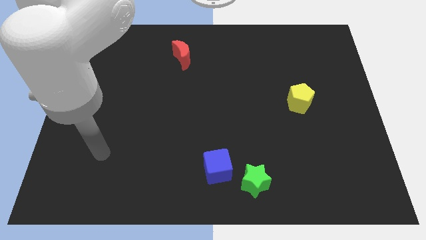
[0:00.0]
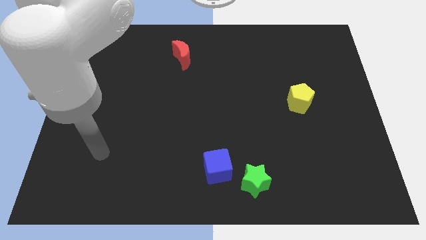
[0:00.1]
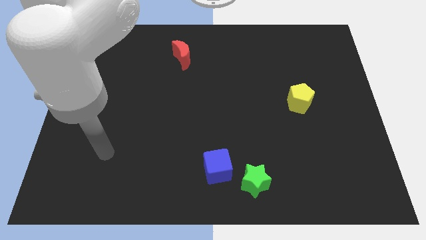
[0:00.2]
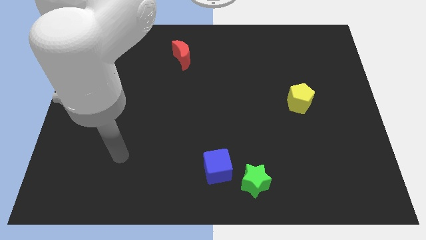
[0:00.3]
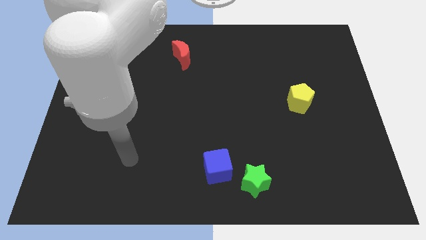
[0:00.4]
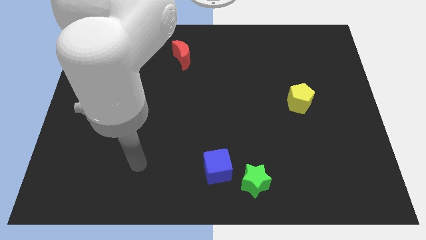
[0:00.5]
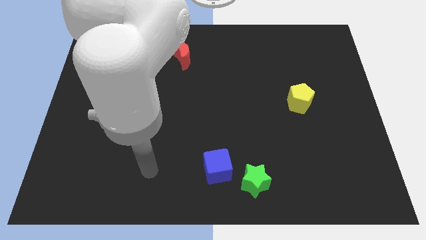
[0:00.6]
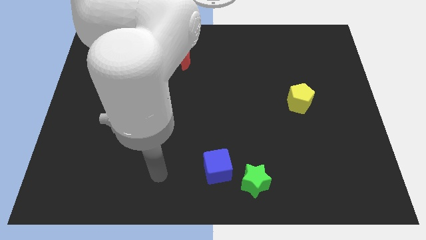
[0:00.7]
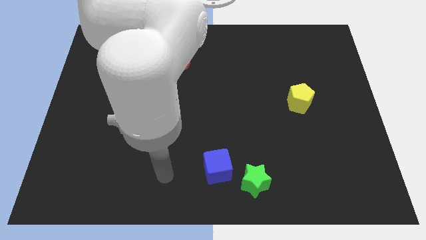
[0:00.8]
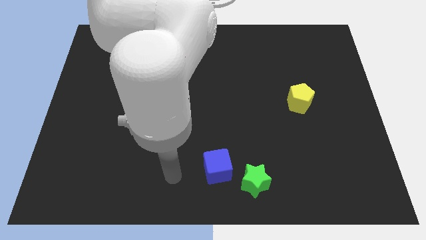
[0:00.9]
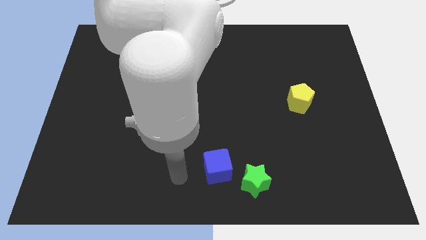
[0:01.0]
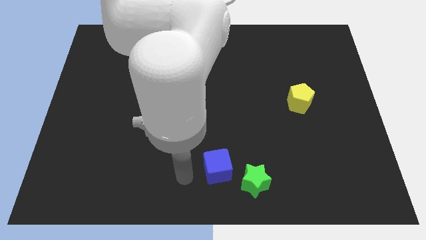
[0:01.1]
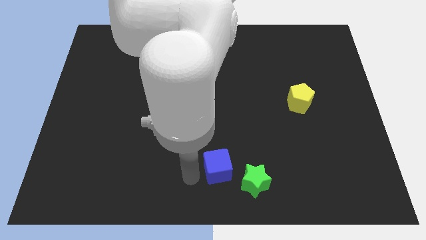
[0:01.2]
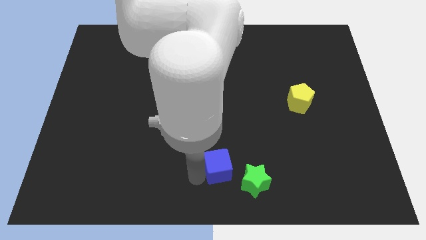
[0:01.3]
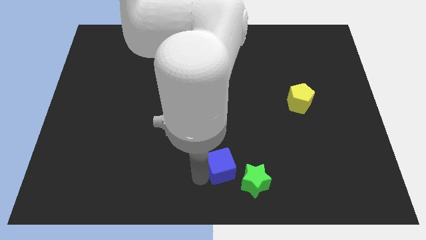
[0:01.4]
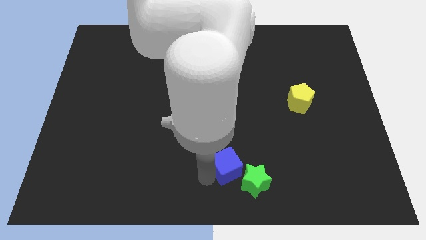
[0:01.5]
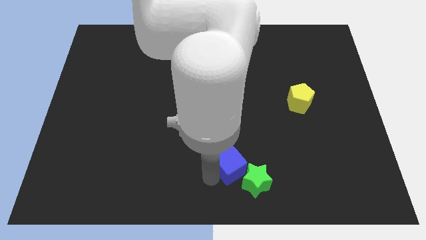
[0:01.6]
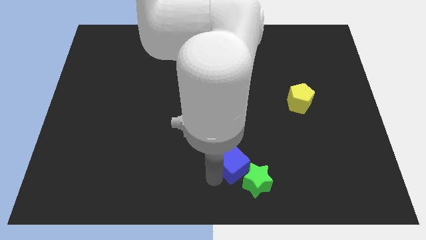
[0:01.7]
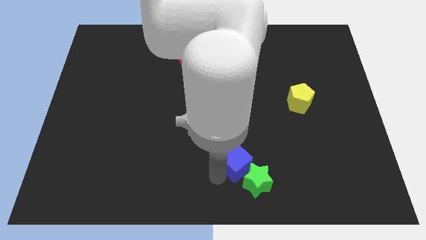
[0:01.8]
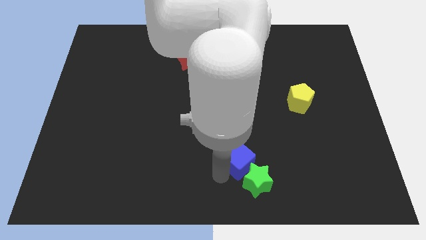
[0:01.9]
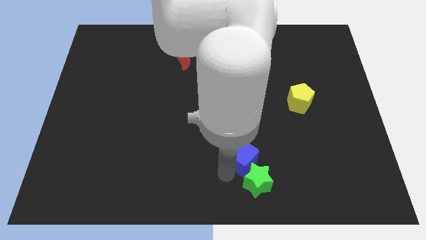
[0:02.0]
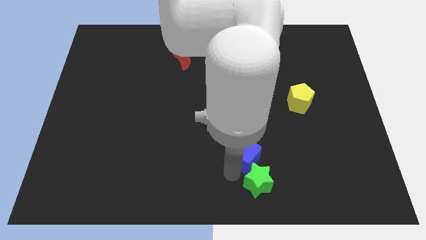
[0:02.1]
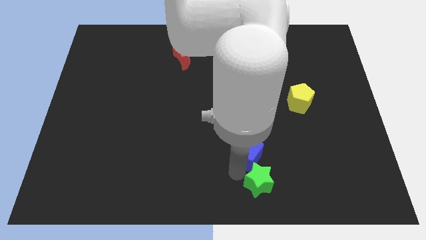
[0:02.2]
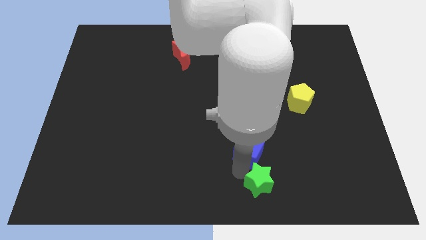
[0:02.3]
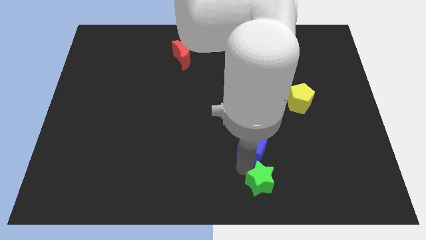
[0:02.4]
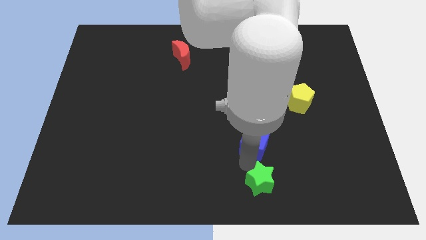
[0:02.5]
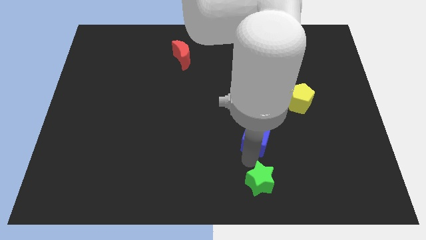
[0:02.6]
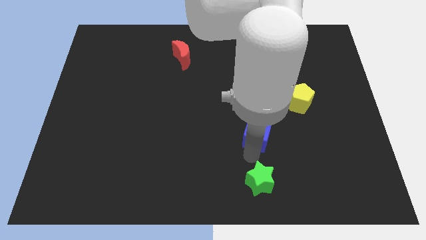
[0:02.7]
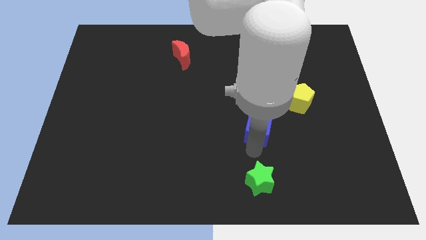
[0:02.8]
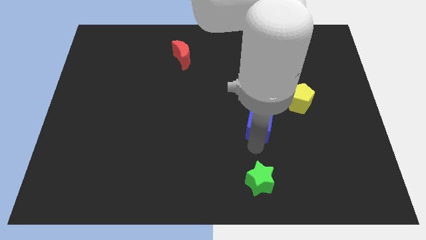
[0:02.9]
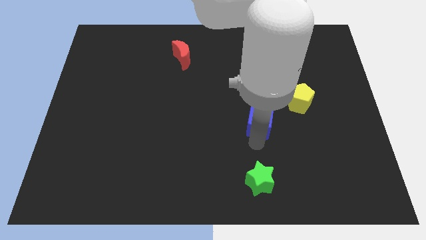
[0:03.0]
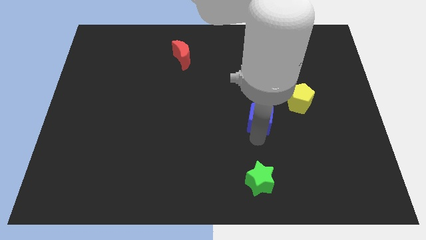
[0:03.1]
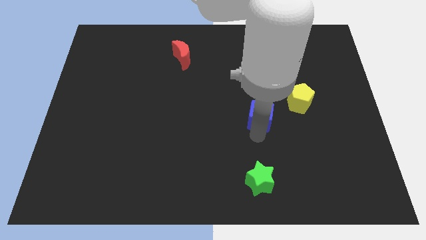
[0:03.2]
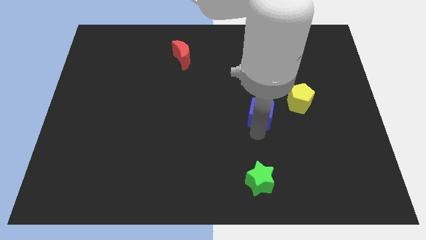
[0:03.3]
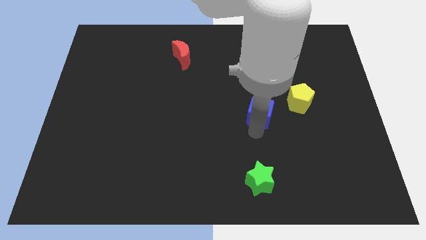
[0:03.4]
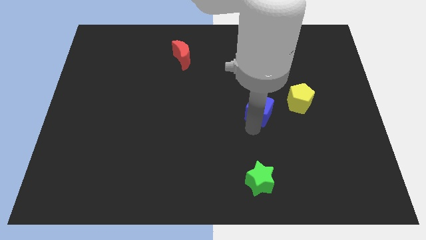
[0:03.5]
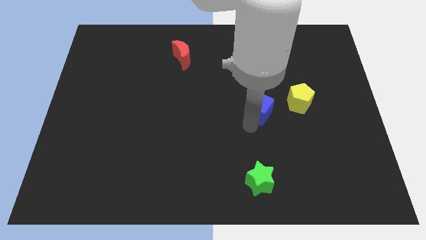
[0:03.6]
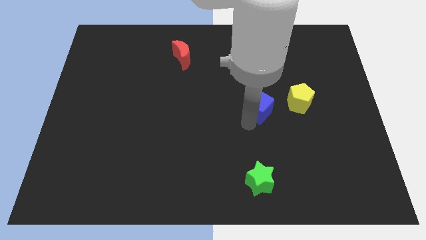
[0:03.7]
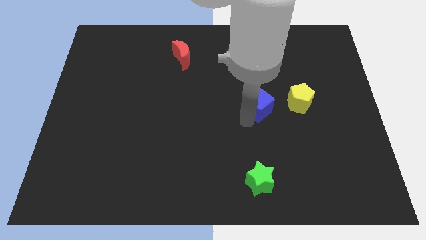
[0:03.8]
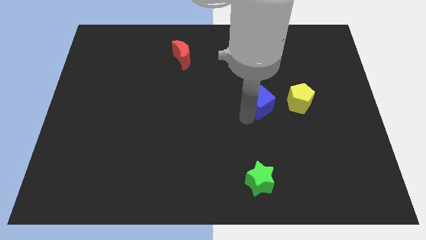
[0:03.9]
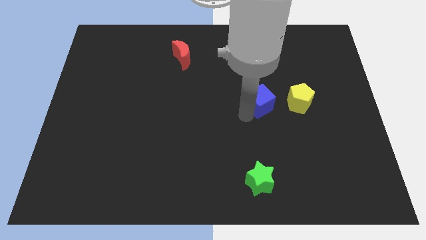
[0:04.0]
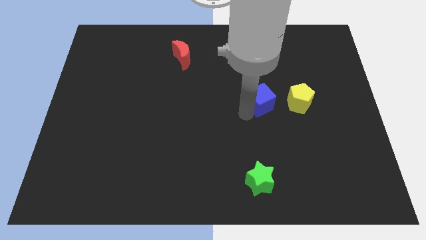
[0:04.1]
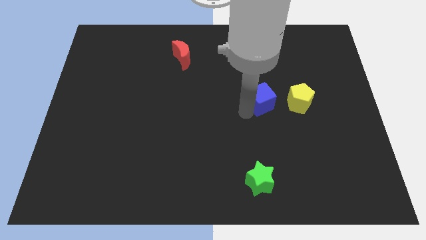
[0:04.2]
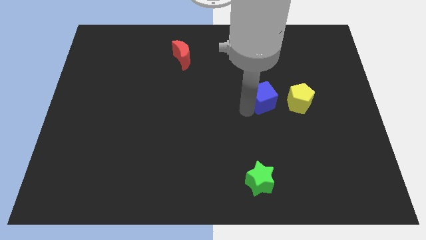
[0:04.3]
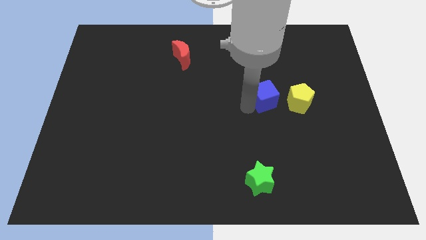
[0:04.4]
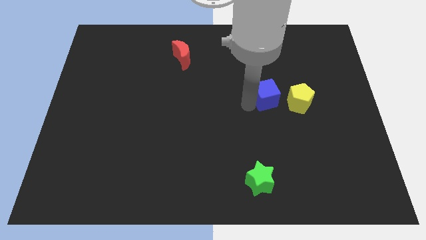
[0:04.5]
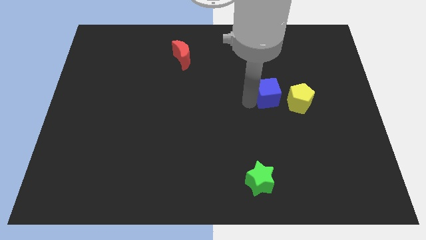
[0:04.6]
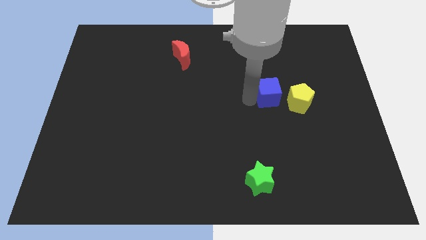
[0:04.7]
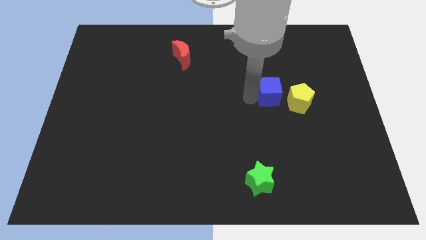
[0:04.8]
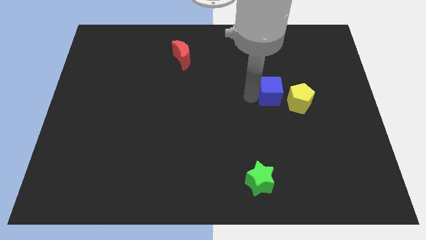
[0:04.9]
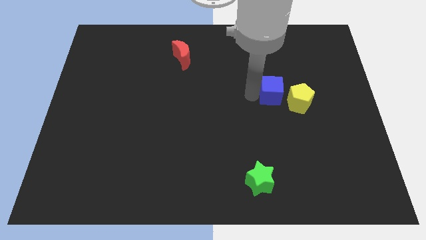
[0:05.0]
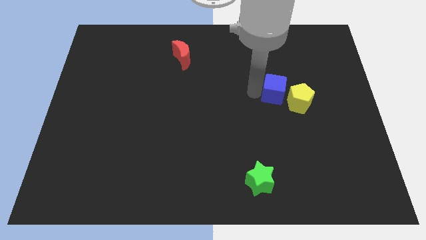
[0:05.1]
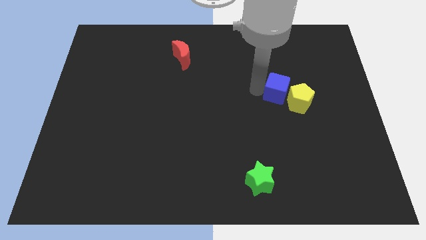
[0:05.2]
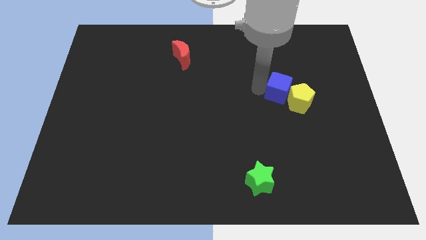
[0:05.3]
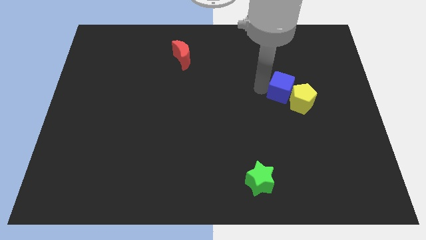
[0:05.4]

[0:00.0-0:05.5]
push the cube next to the yellow pentagon

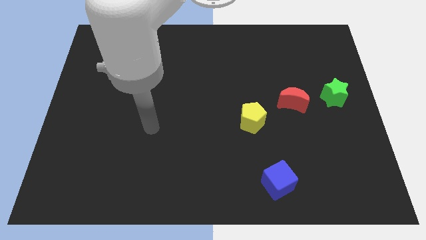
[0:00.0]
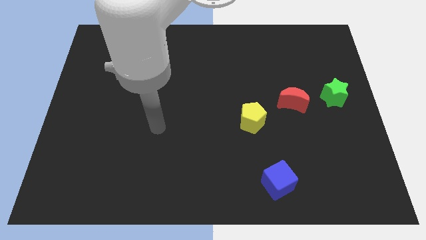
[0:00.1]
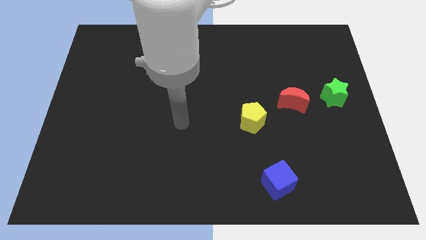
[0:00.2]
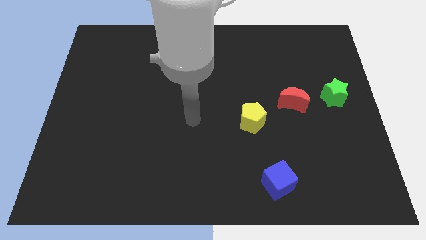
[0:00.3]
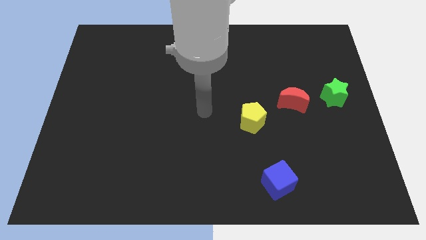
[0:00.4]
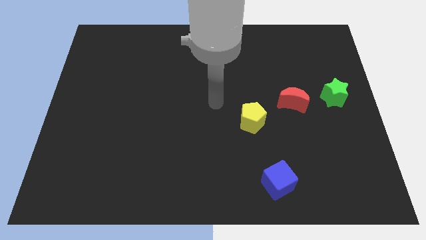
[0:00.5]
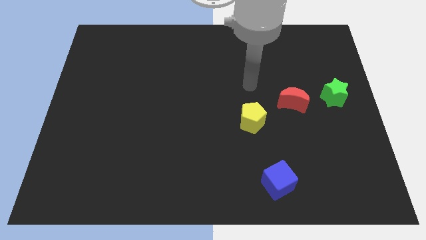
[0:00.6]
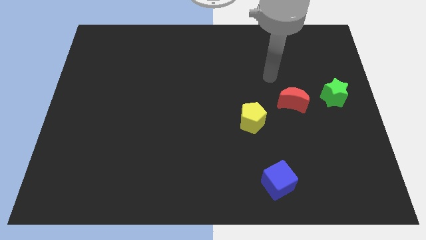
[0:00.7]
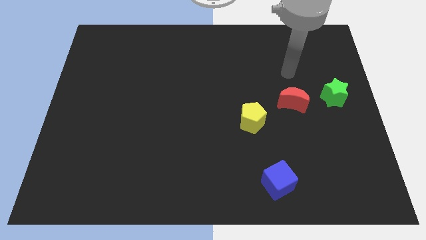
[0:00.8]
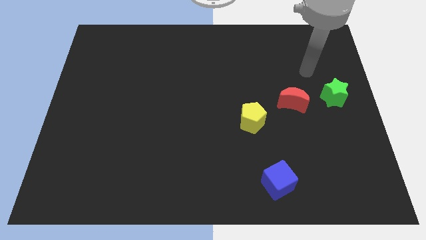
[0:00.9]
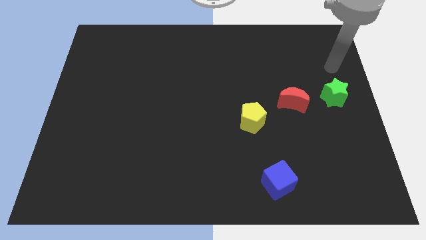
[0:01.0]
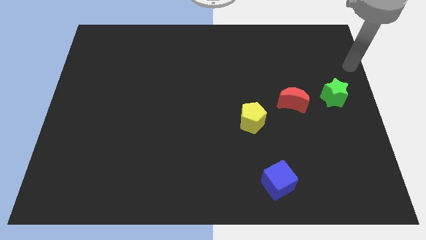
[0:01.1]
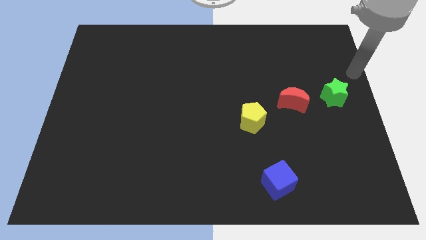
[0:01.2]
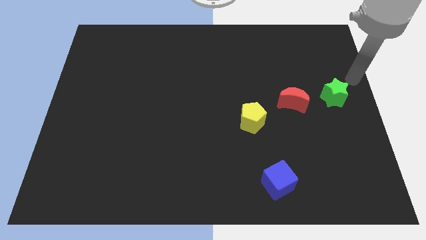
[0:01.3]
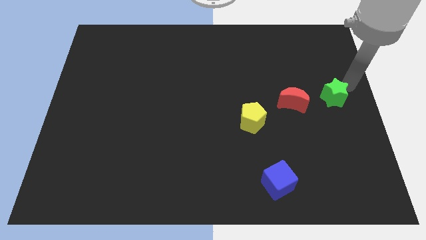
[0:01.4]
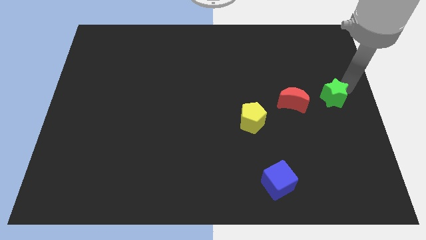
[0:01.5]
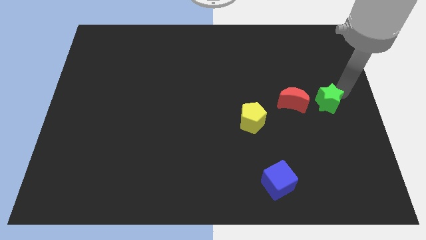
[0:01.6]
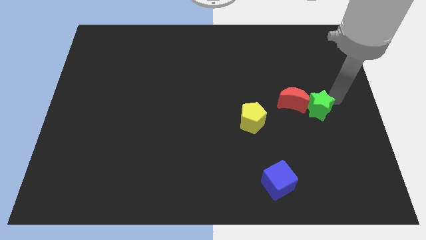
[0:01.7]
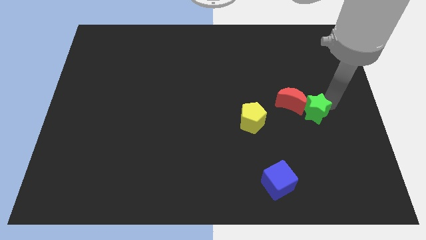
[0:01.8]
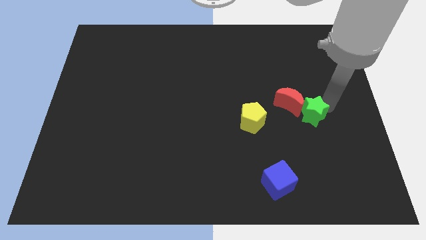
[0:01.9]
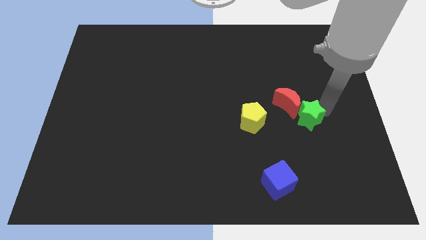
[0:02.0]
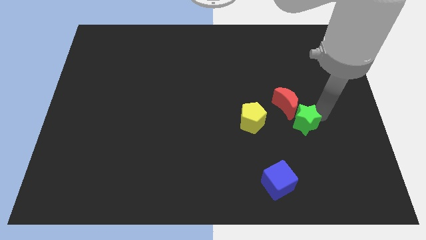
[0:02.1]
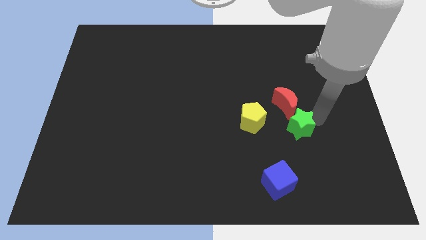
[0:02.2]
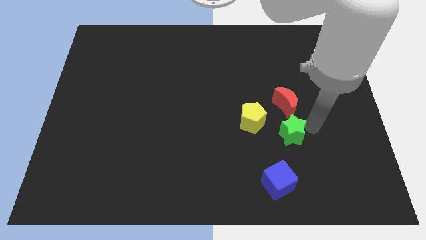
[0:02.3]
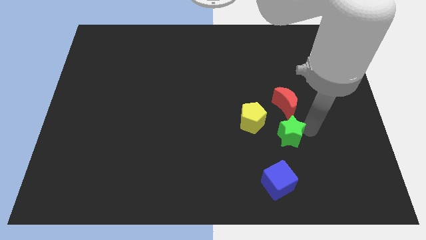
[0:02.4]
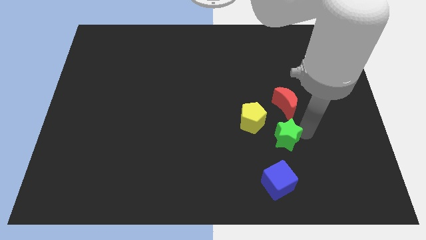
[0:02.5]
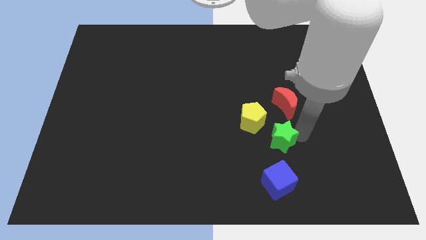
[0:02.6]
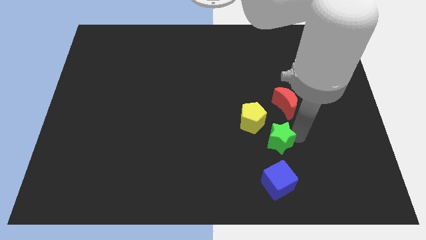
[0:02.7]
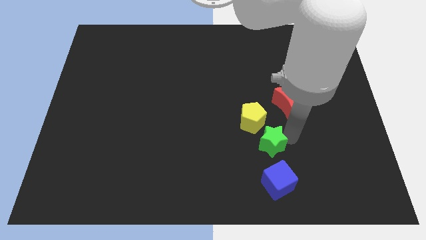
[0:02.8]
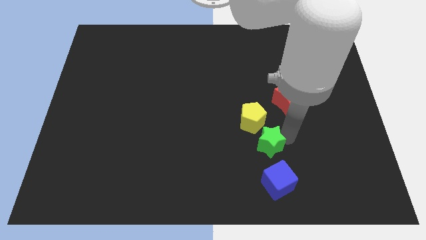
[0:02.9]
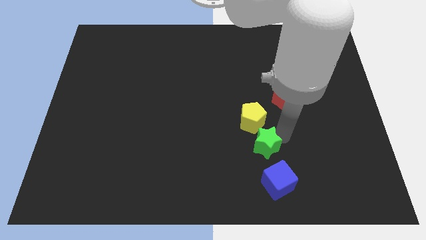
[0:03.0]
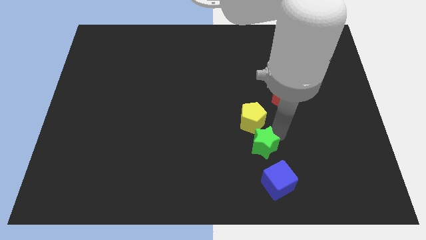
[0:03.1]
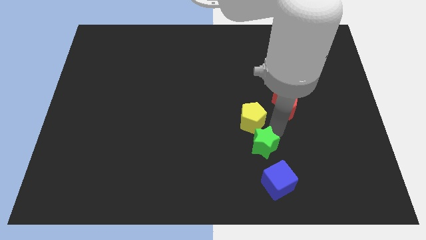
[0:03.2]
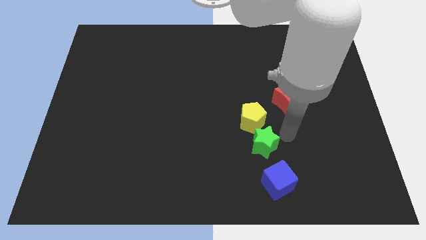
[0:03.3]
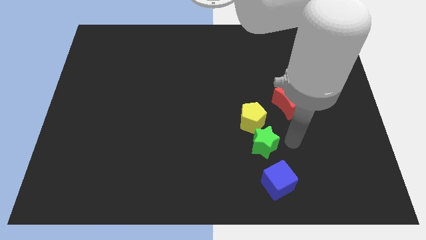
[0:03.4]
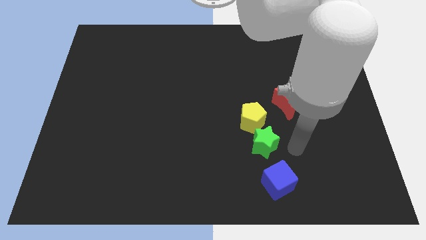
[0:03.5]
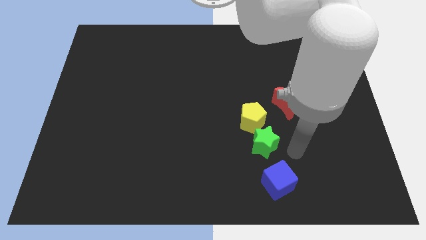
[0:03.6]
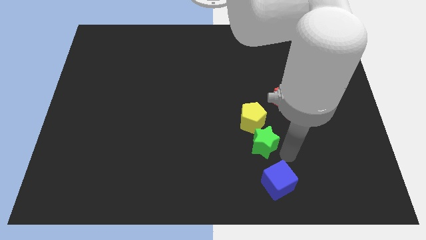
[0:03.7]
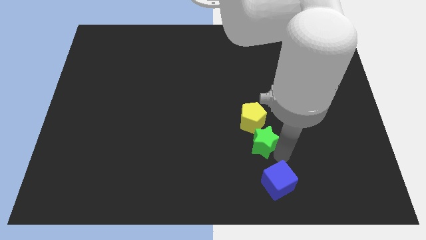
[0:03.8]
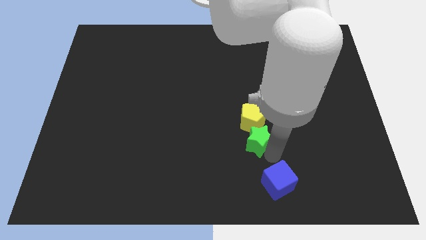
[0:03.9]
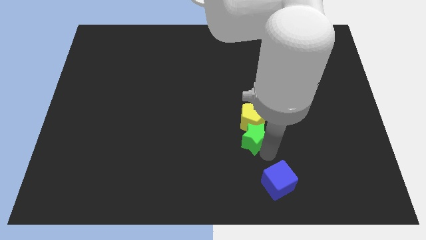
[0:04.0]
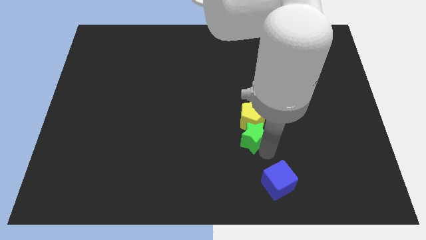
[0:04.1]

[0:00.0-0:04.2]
push the star next to the yellow pentagon
